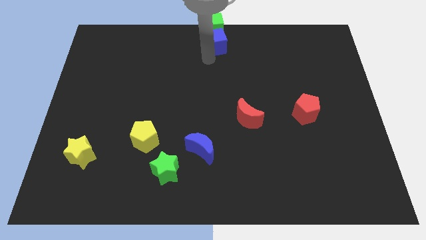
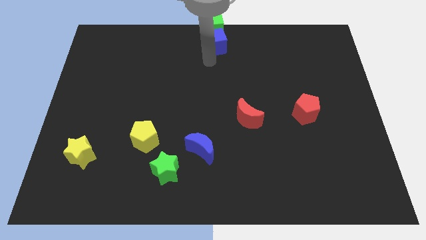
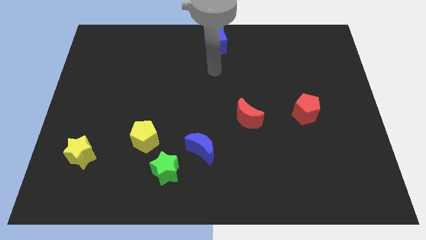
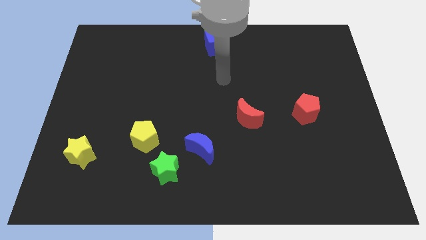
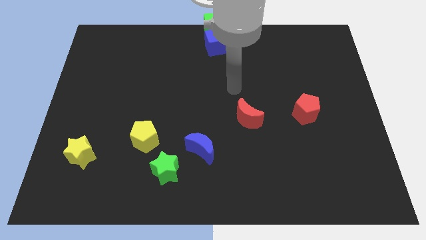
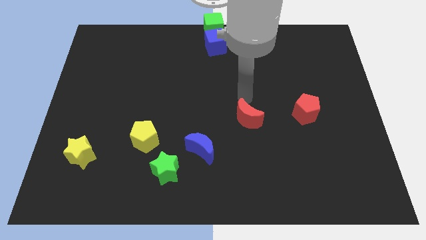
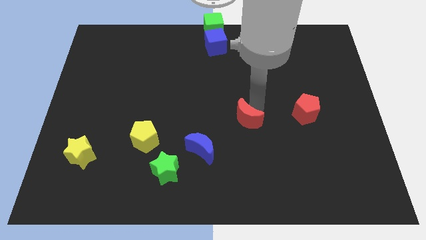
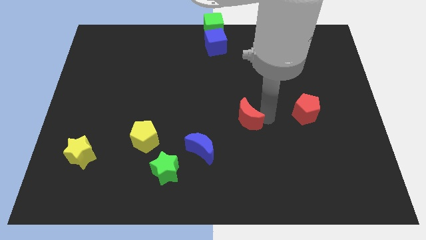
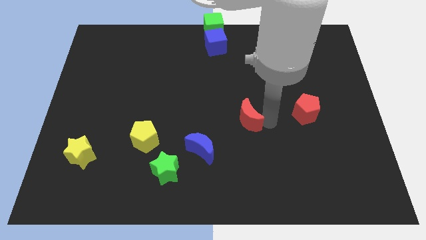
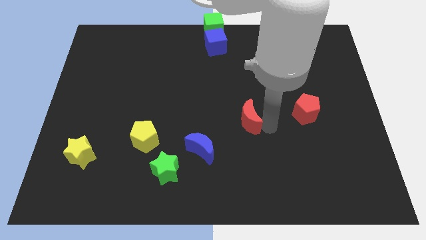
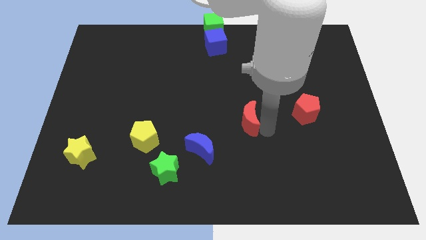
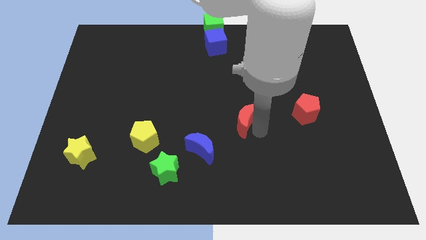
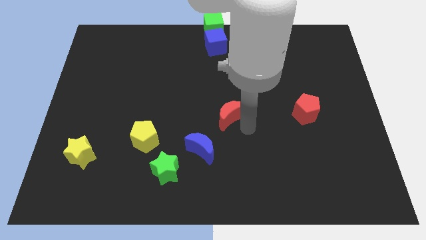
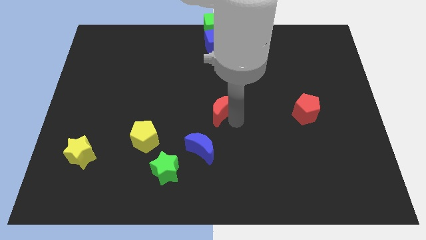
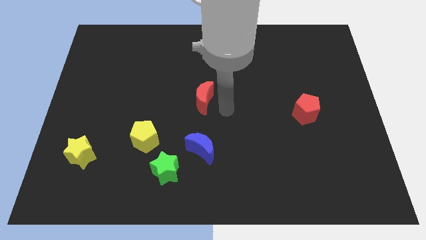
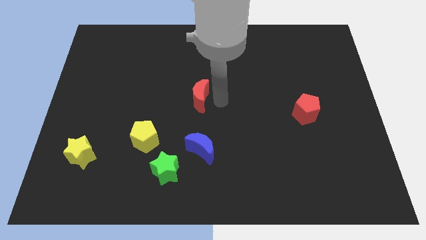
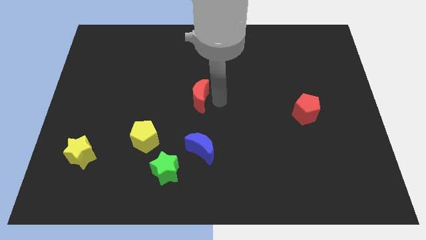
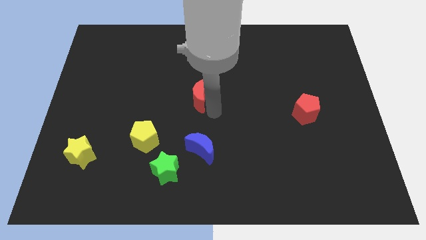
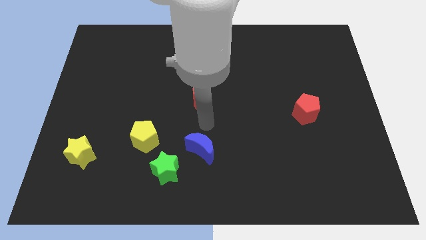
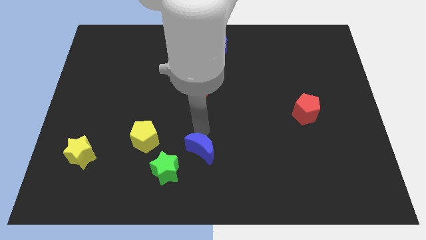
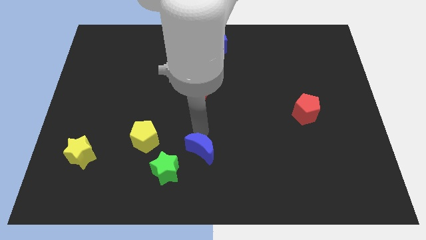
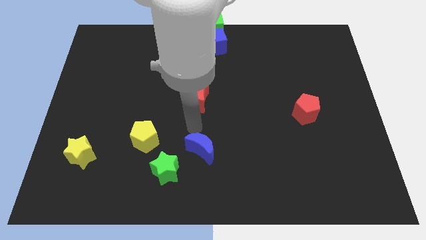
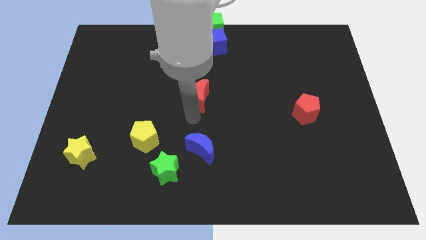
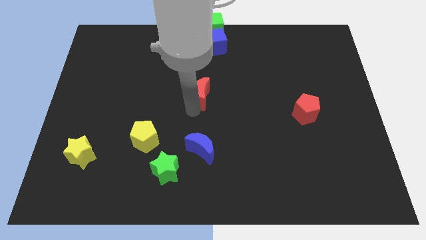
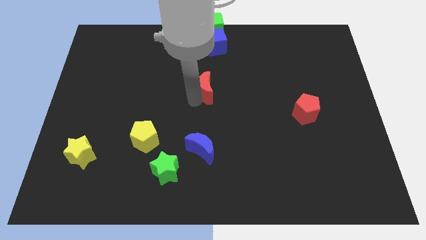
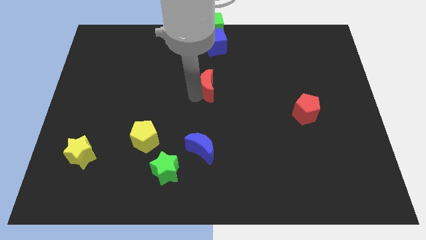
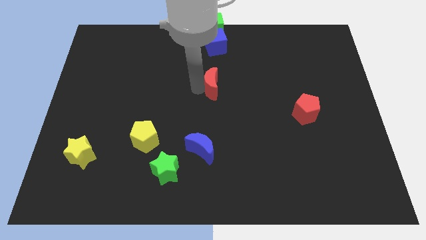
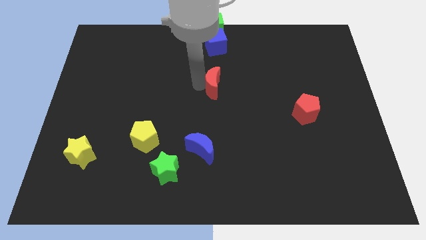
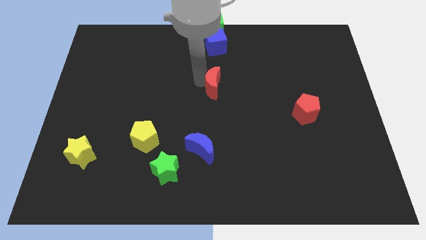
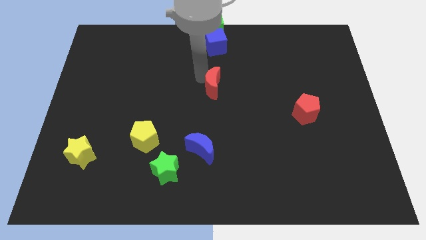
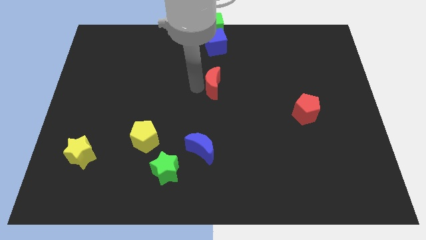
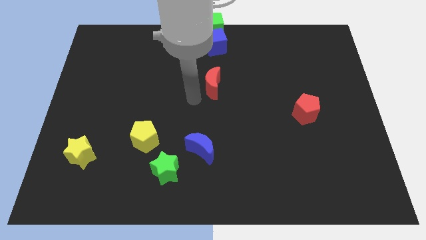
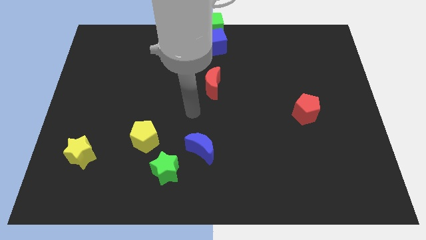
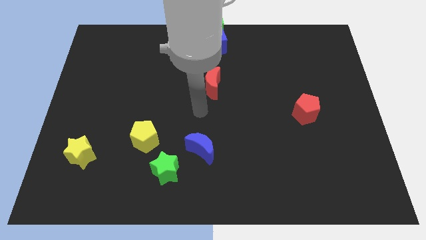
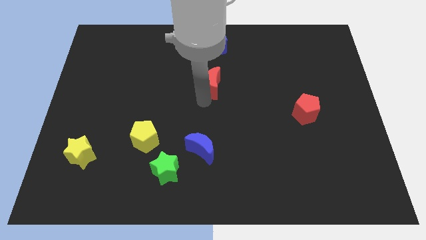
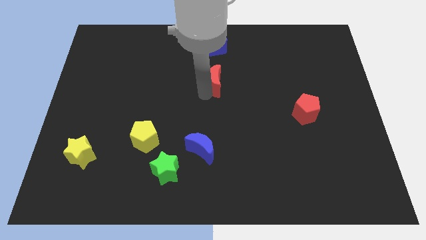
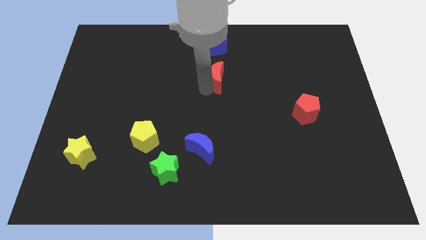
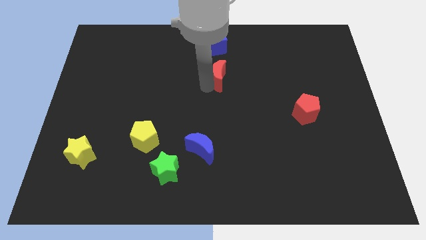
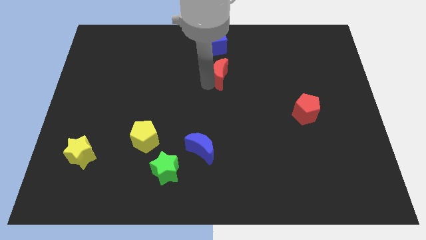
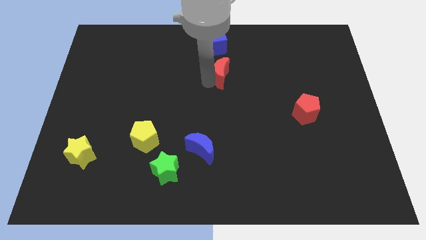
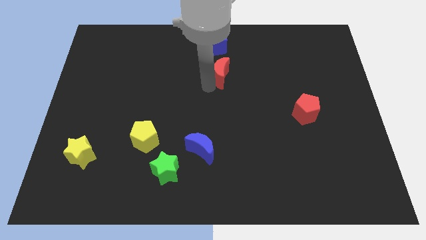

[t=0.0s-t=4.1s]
move red crescent towards blue cube

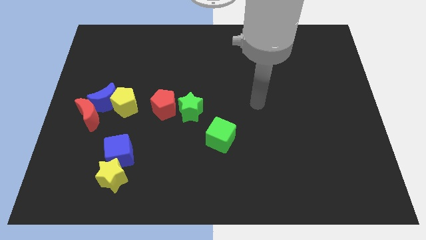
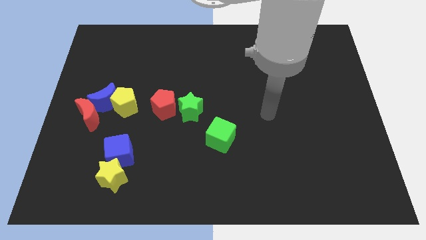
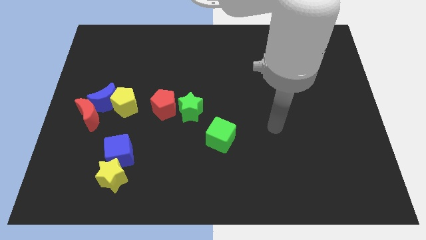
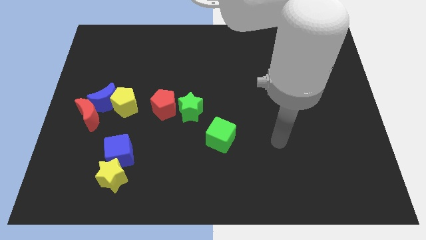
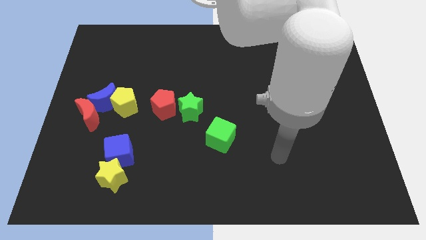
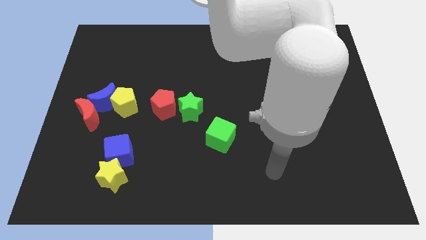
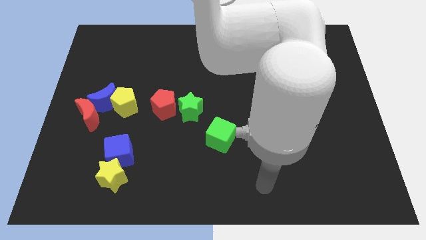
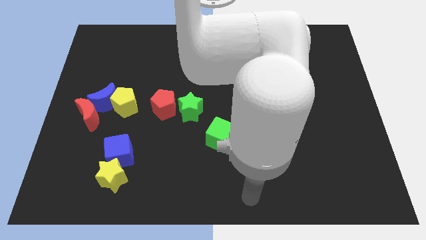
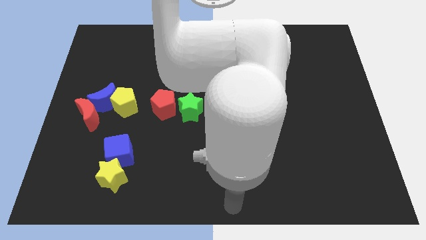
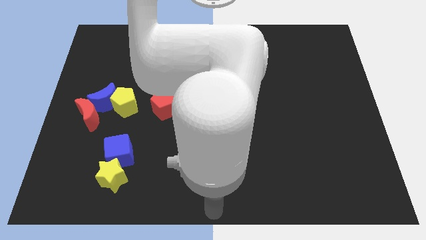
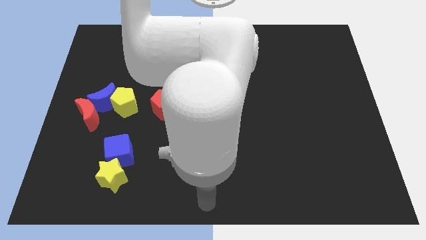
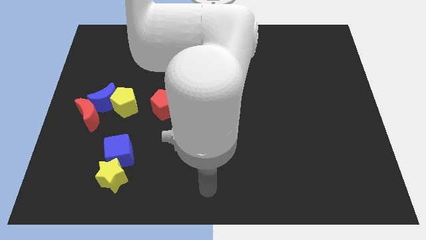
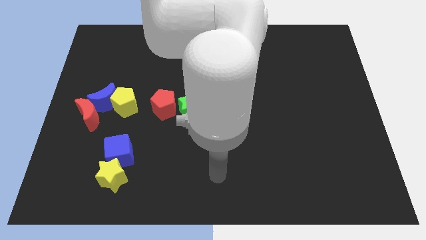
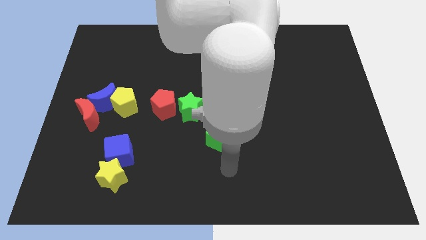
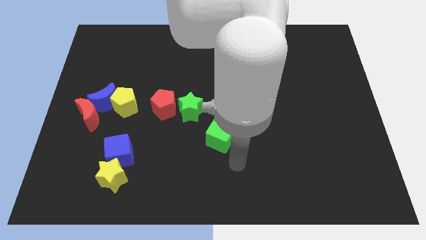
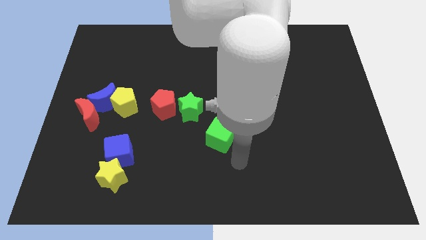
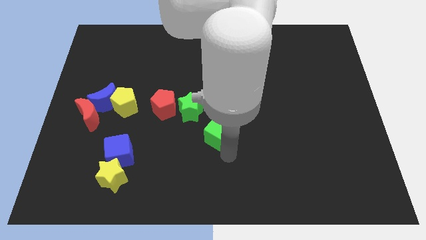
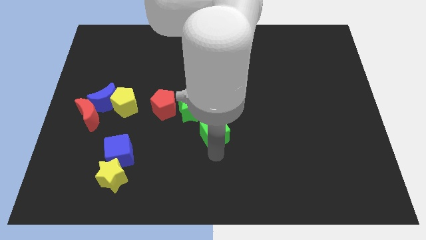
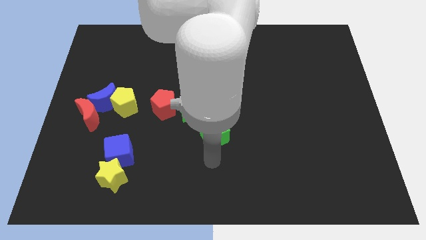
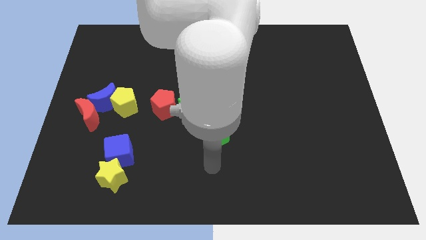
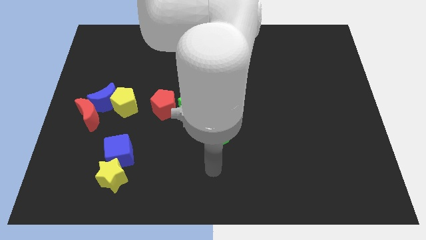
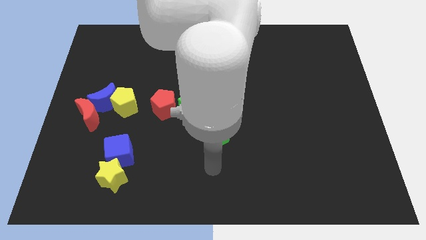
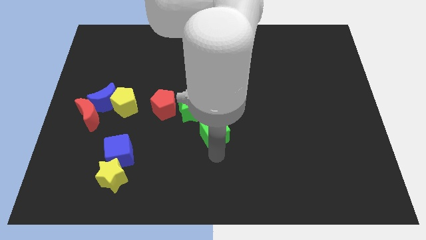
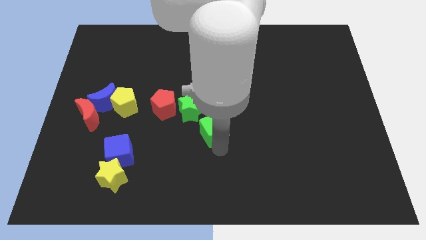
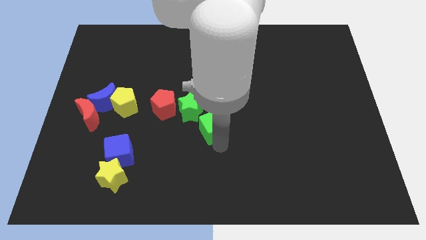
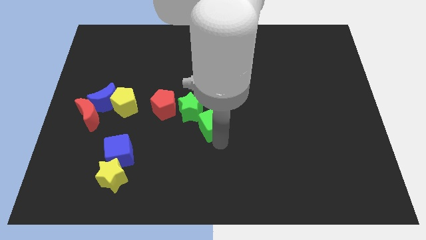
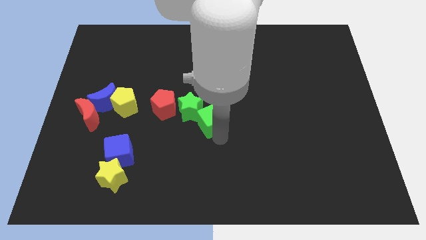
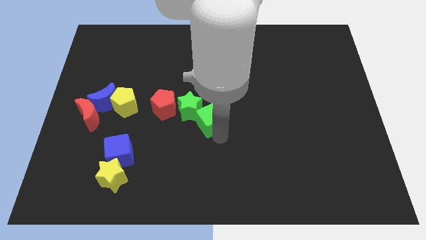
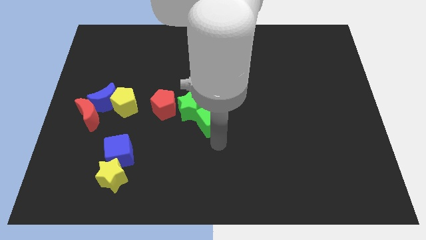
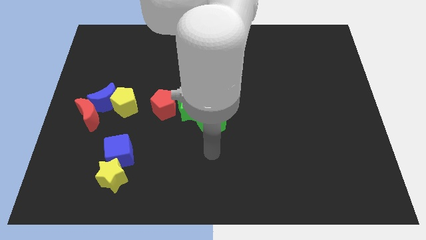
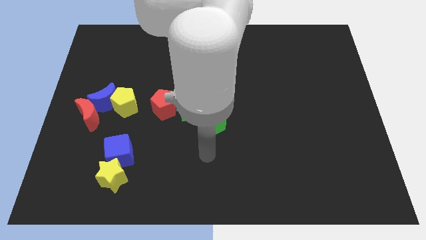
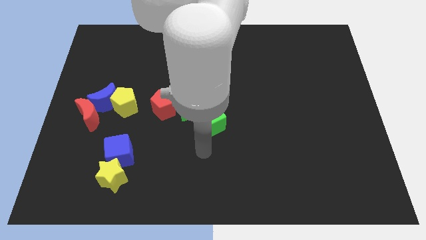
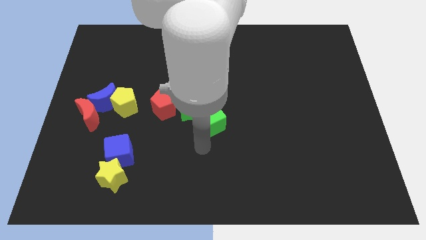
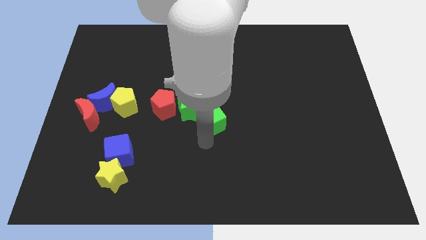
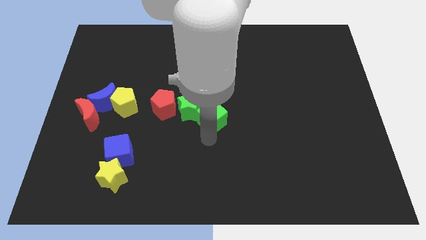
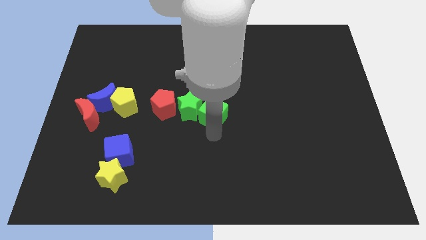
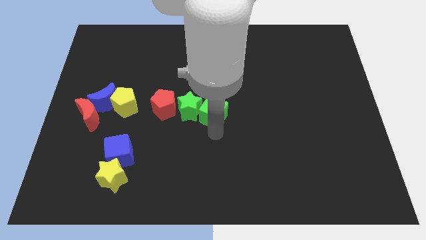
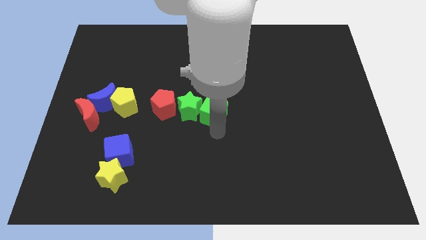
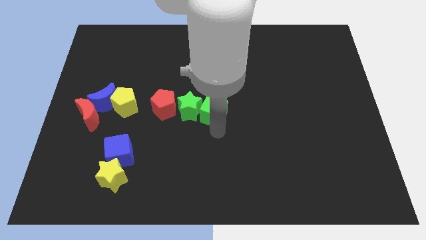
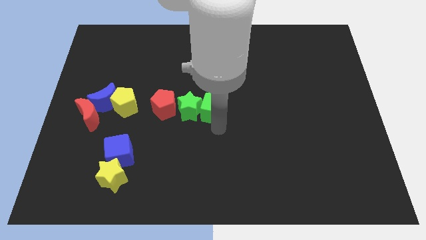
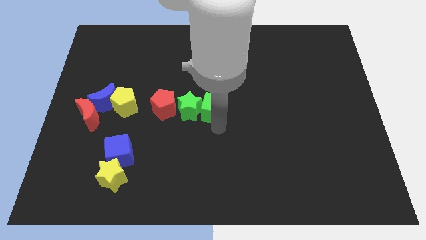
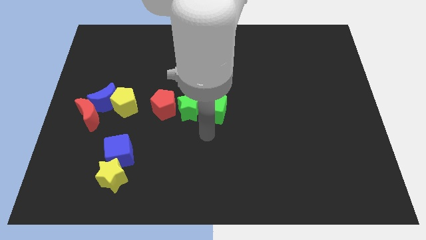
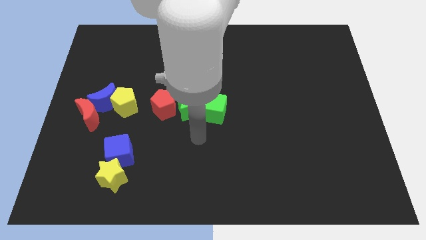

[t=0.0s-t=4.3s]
move the green cube to the right of the green star

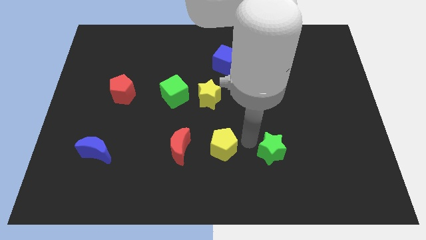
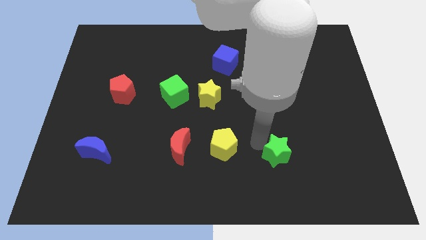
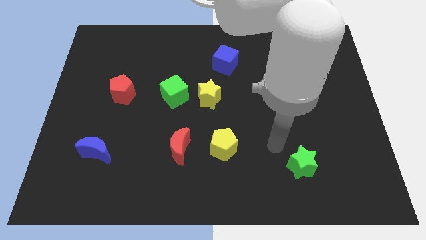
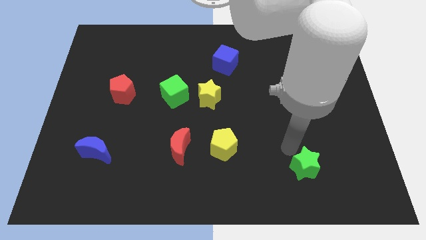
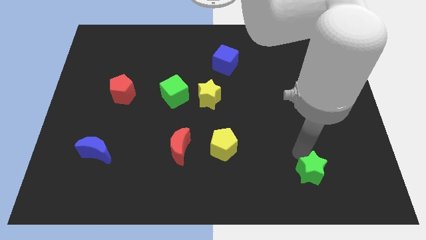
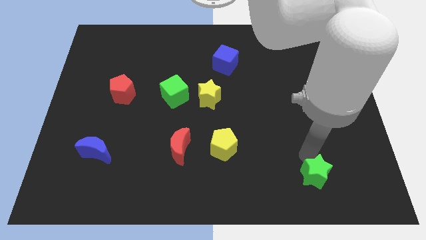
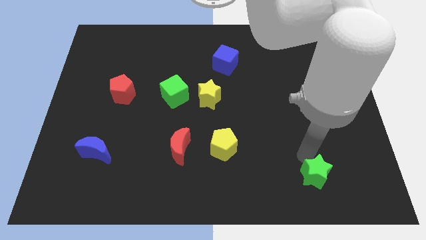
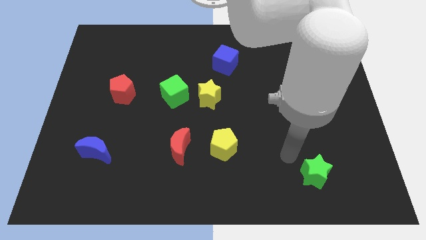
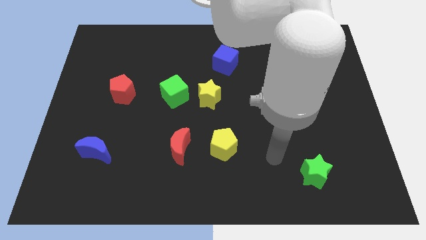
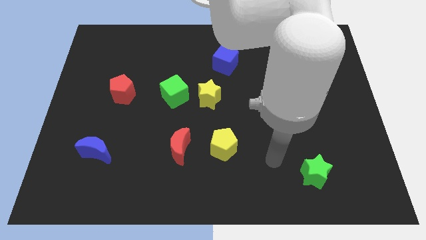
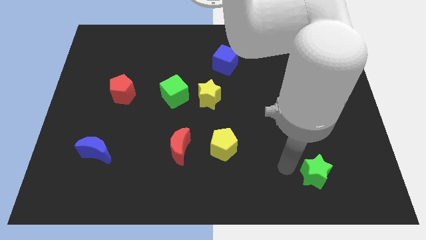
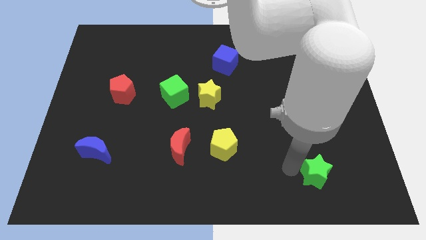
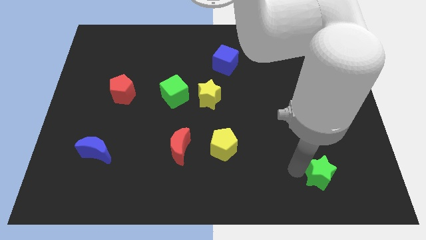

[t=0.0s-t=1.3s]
place the green star towards bottom right
